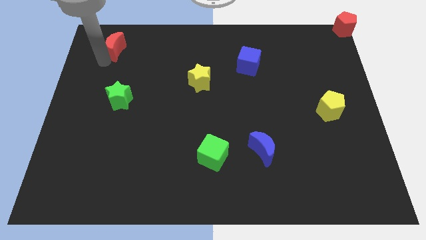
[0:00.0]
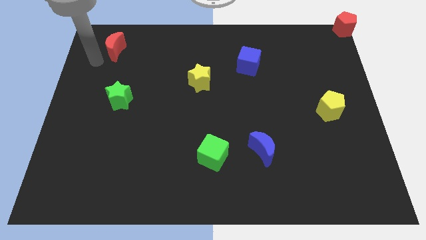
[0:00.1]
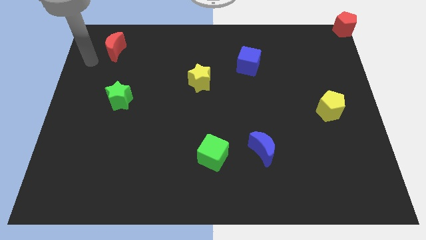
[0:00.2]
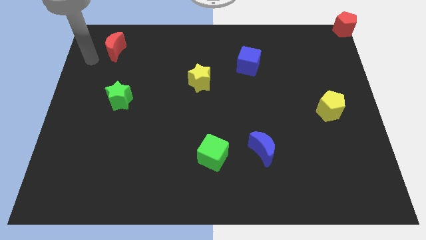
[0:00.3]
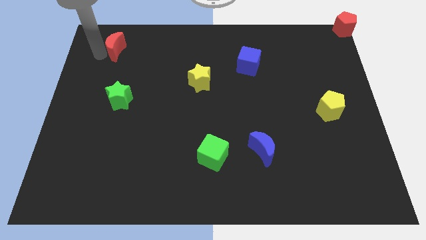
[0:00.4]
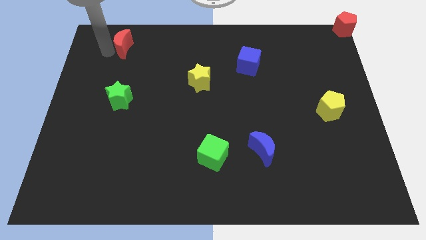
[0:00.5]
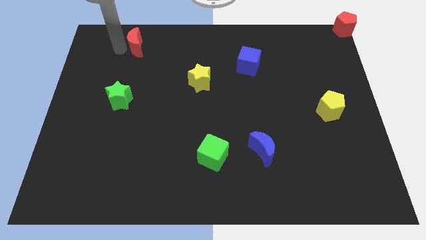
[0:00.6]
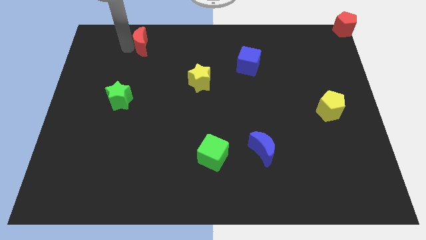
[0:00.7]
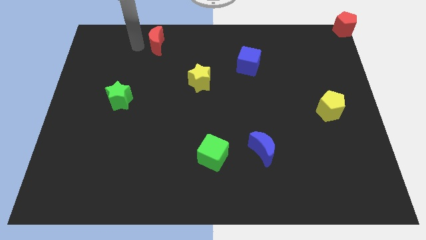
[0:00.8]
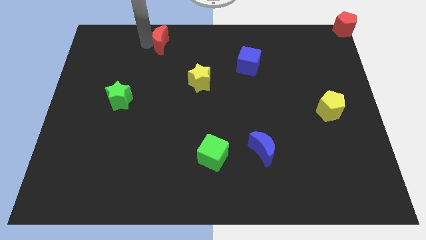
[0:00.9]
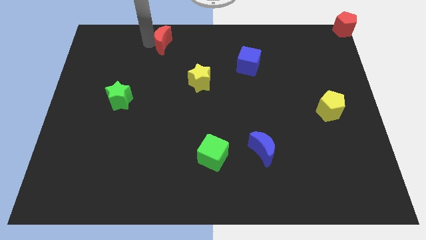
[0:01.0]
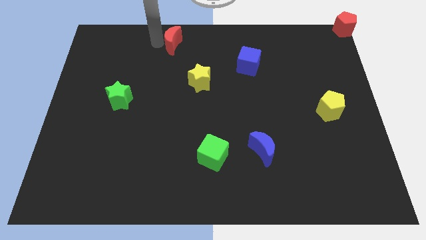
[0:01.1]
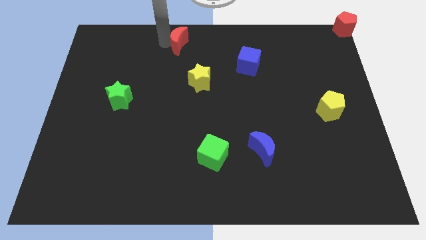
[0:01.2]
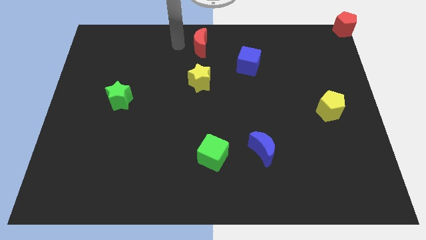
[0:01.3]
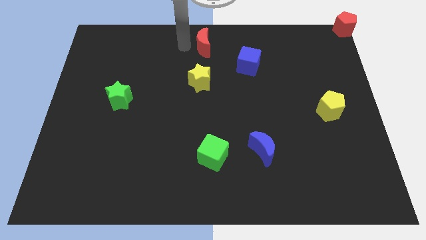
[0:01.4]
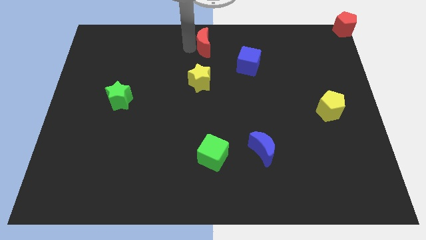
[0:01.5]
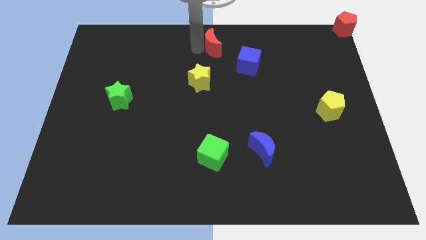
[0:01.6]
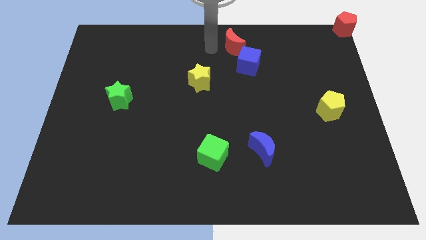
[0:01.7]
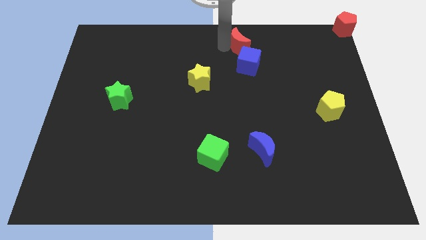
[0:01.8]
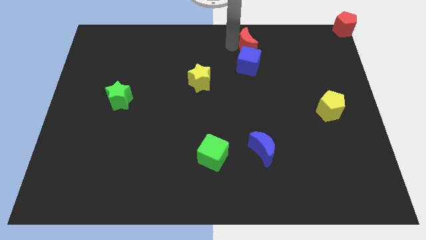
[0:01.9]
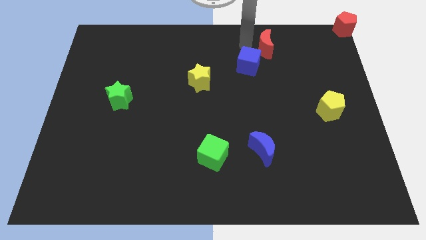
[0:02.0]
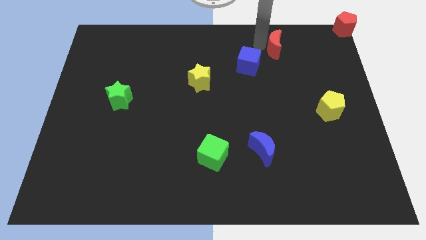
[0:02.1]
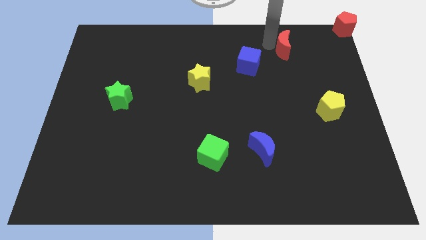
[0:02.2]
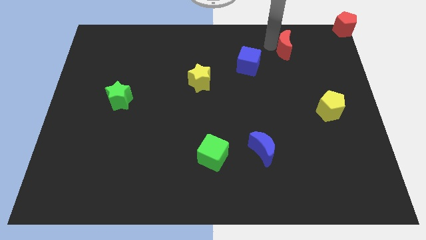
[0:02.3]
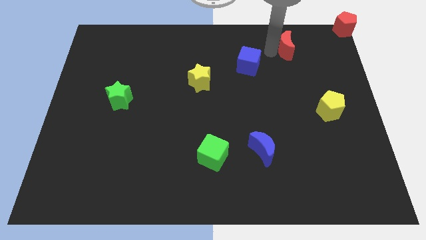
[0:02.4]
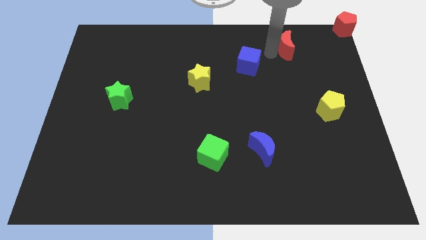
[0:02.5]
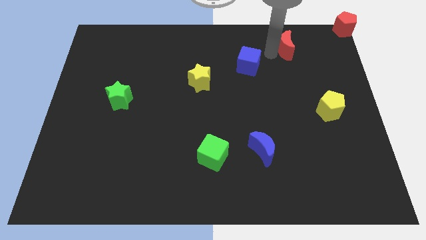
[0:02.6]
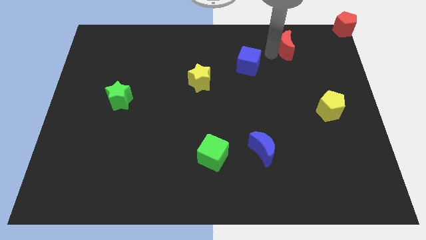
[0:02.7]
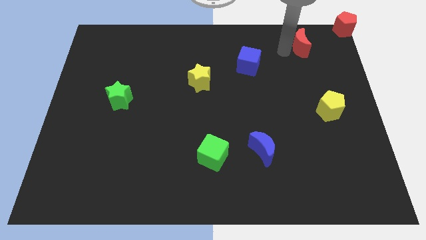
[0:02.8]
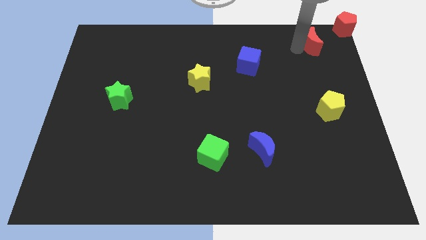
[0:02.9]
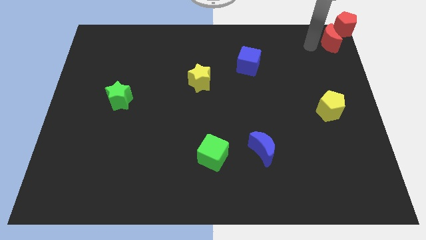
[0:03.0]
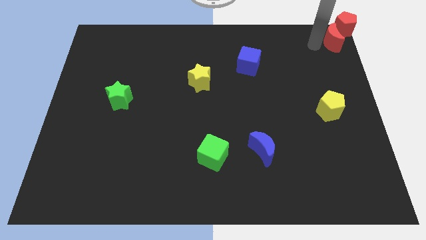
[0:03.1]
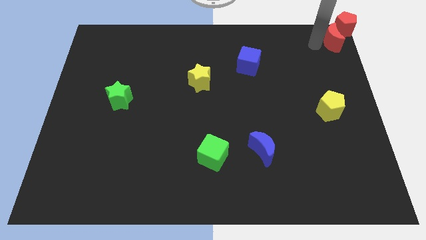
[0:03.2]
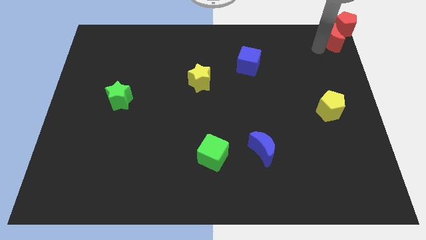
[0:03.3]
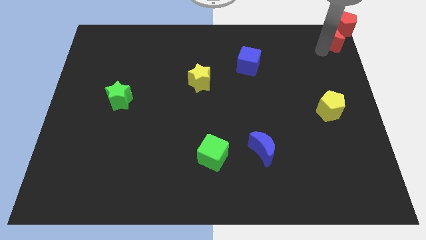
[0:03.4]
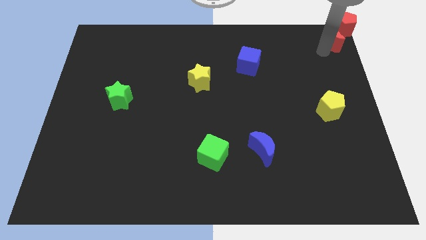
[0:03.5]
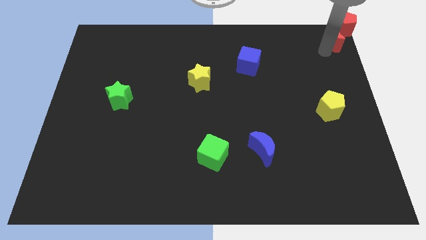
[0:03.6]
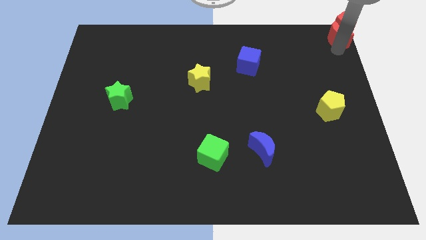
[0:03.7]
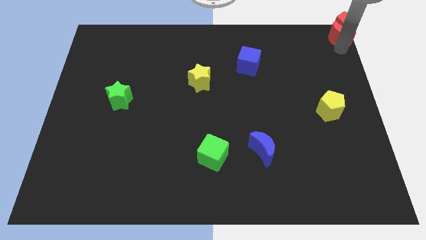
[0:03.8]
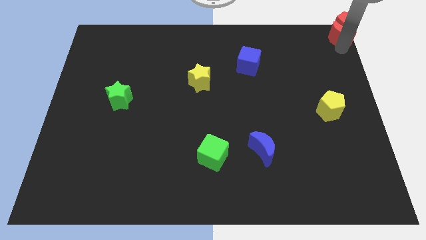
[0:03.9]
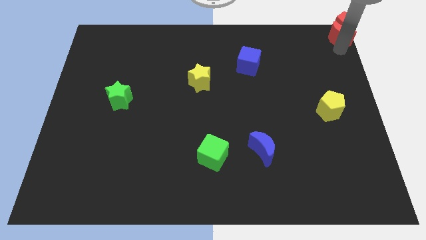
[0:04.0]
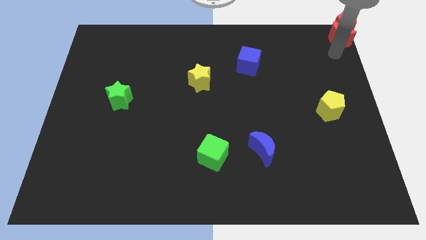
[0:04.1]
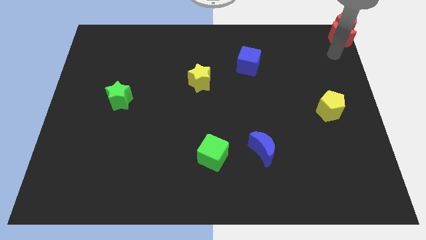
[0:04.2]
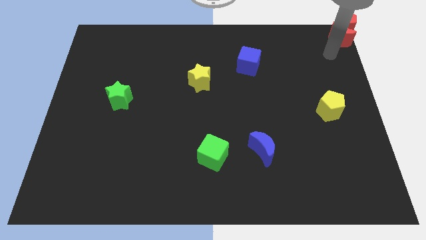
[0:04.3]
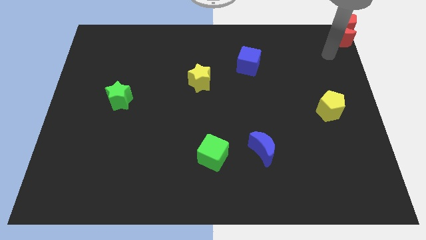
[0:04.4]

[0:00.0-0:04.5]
push the red crescent to the bottom of the red pentagon

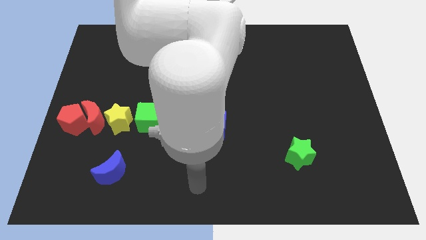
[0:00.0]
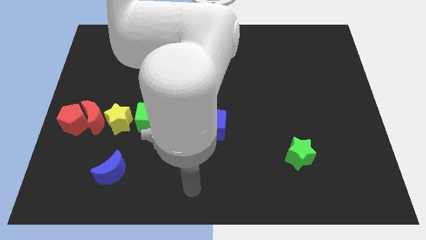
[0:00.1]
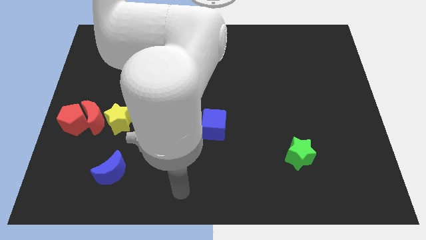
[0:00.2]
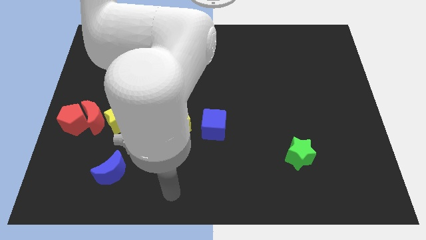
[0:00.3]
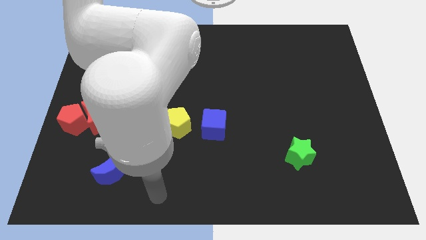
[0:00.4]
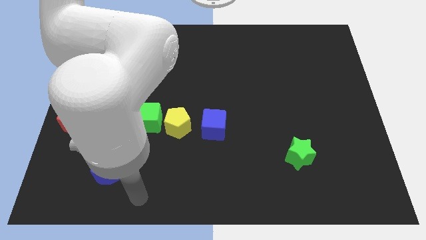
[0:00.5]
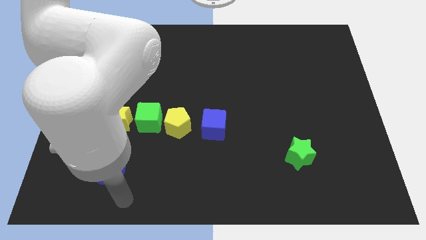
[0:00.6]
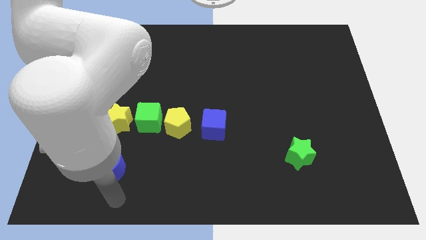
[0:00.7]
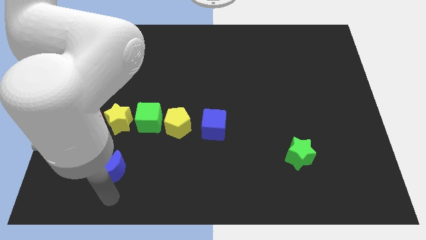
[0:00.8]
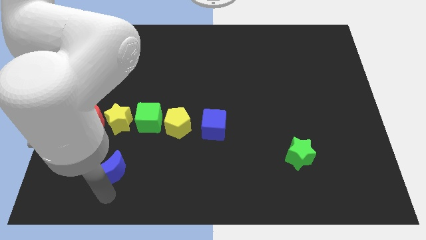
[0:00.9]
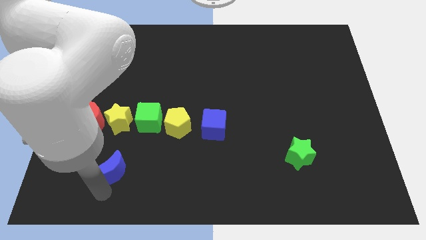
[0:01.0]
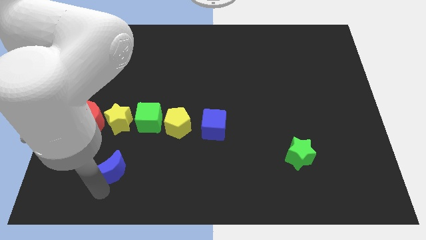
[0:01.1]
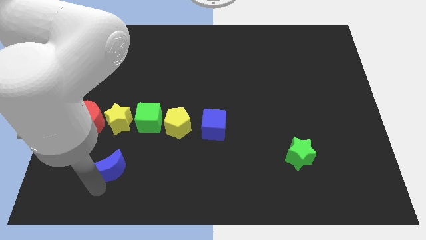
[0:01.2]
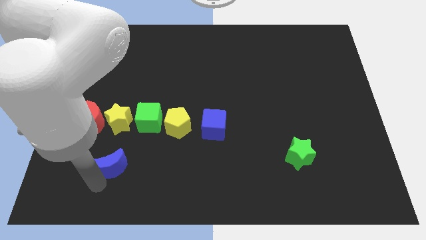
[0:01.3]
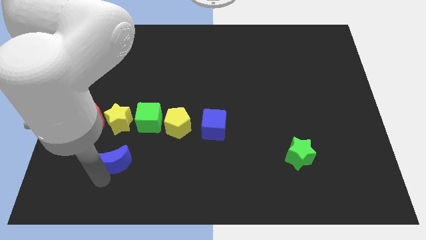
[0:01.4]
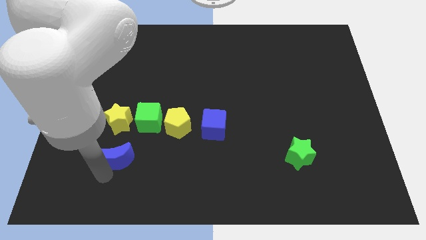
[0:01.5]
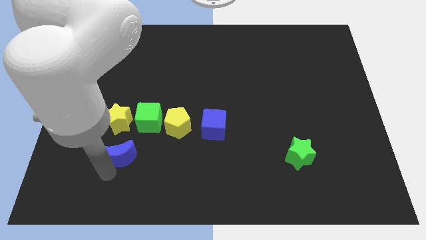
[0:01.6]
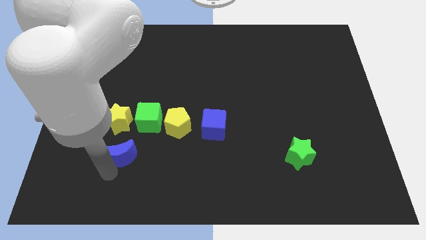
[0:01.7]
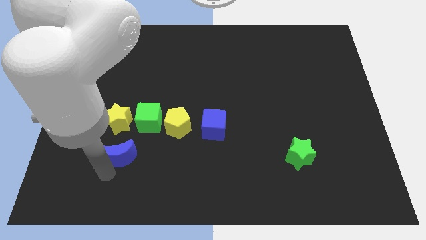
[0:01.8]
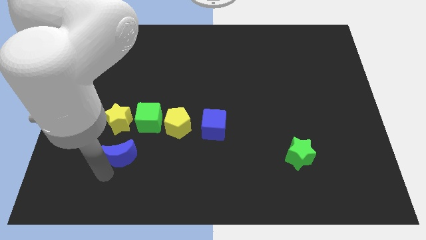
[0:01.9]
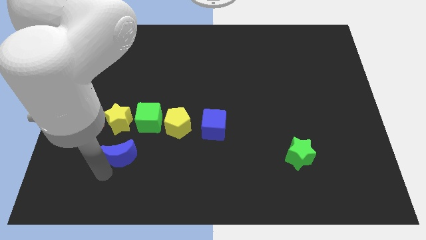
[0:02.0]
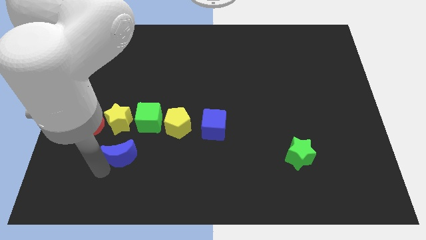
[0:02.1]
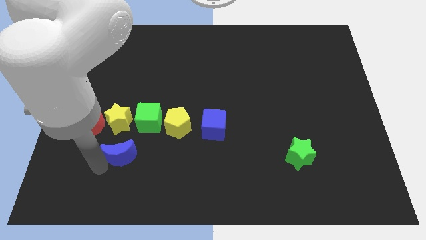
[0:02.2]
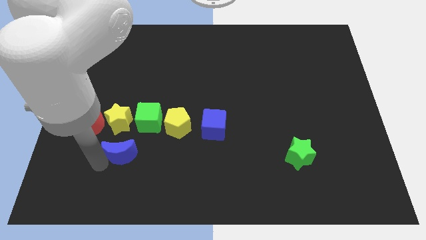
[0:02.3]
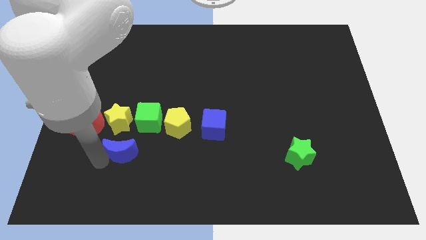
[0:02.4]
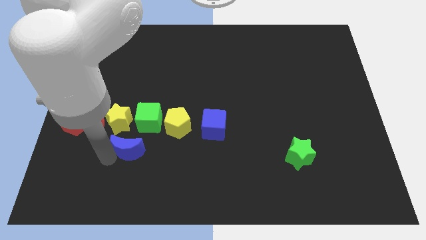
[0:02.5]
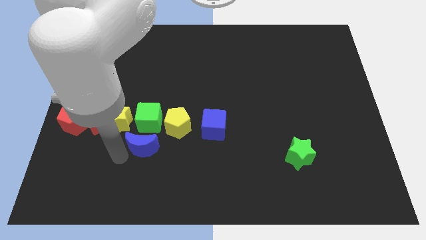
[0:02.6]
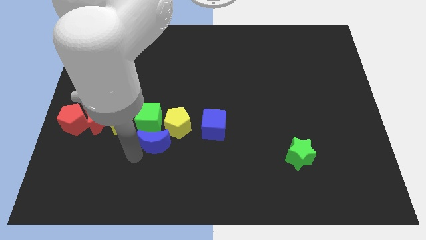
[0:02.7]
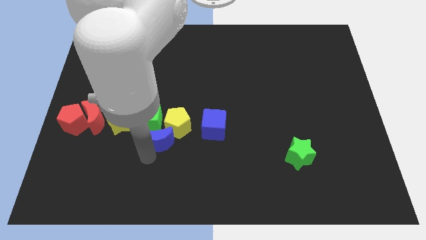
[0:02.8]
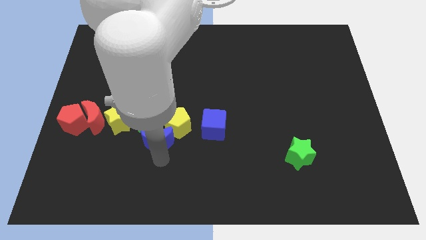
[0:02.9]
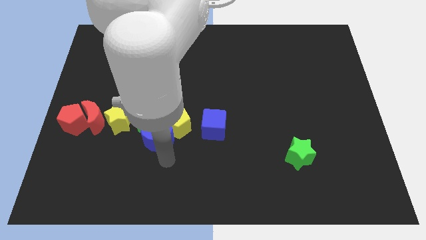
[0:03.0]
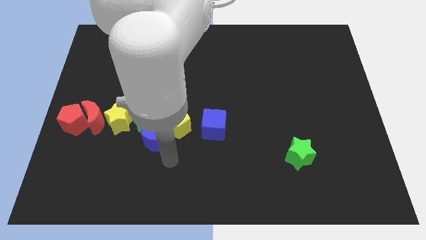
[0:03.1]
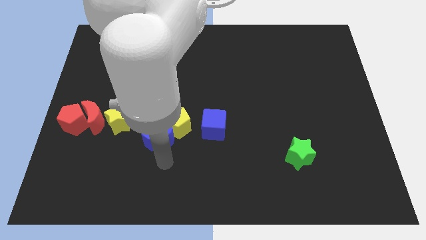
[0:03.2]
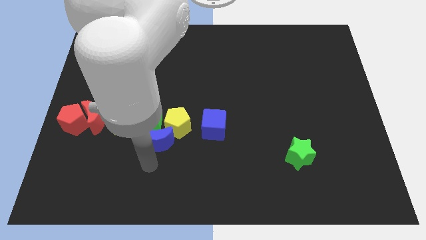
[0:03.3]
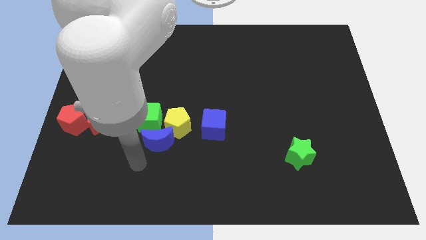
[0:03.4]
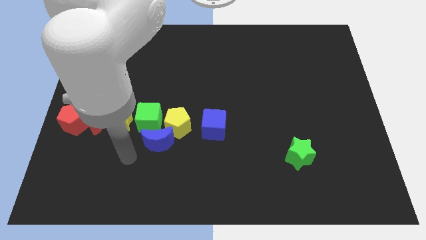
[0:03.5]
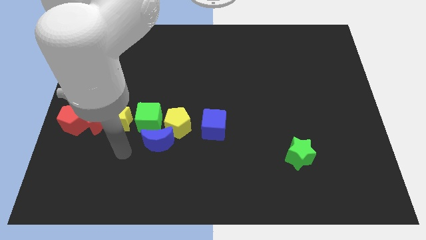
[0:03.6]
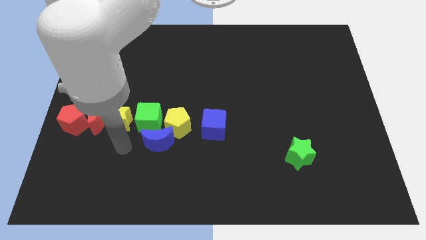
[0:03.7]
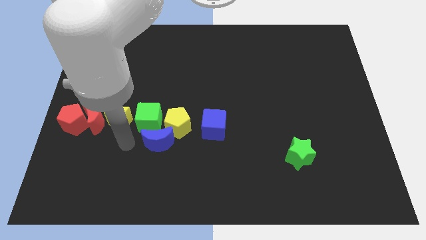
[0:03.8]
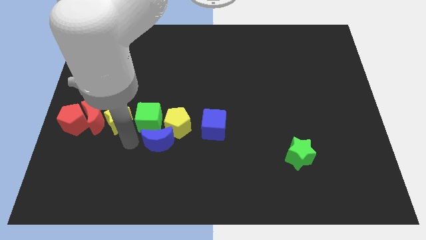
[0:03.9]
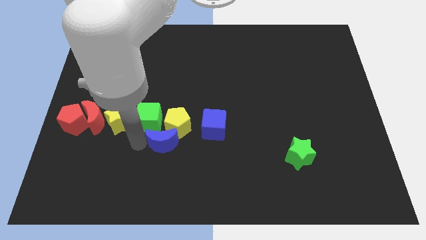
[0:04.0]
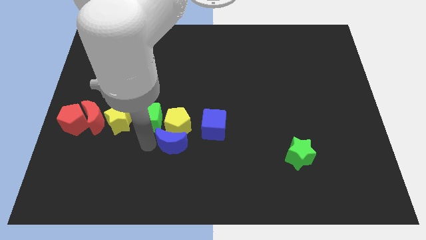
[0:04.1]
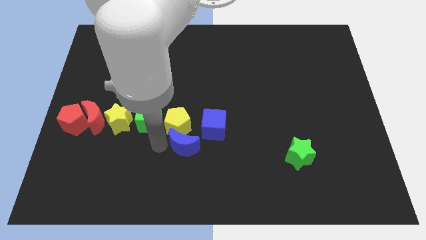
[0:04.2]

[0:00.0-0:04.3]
push the blue crescent to the bottom side of the yellow pentagon

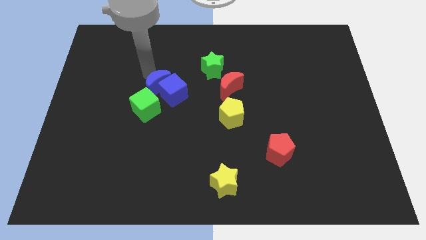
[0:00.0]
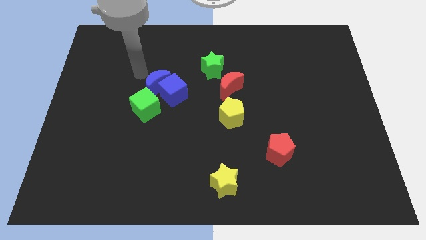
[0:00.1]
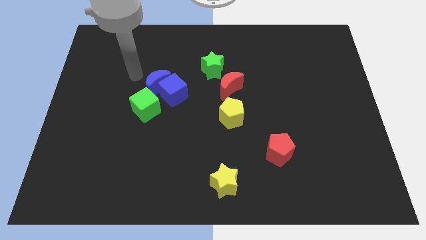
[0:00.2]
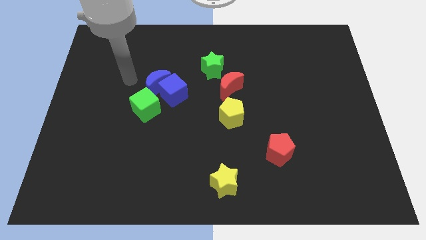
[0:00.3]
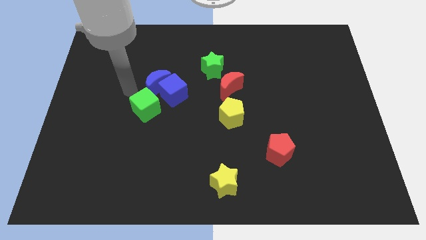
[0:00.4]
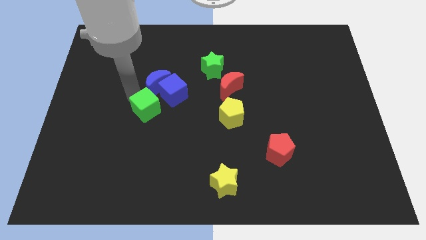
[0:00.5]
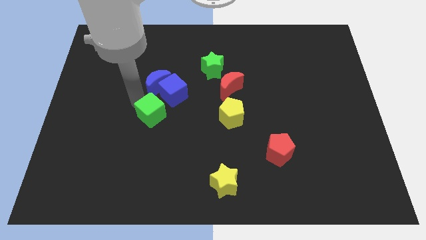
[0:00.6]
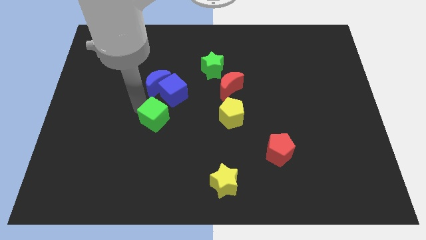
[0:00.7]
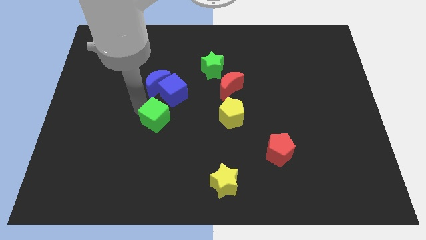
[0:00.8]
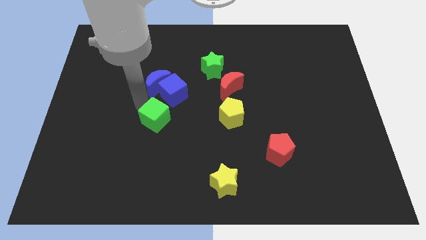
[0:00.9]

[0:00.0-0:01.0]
push the green cube to the bottom of the blue cube
